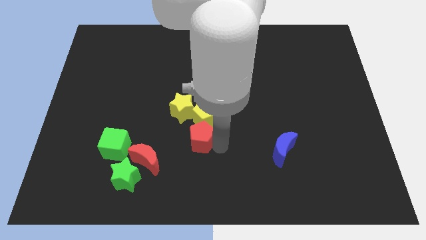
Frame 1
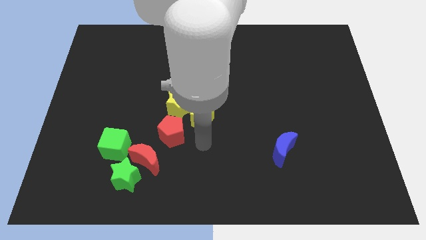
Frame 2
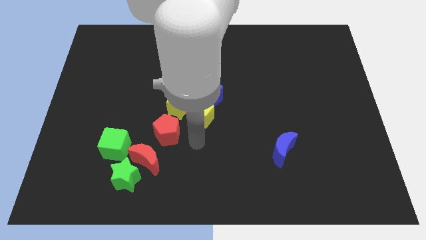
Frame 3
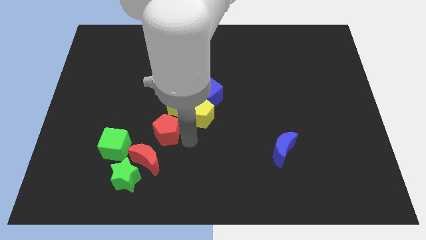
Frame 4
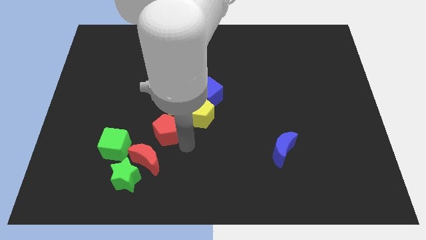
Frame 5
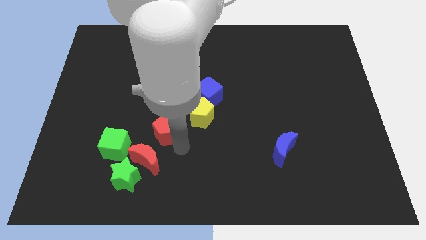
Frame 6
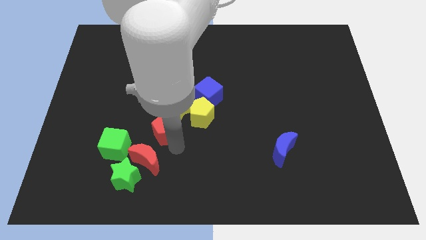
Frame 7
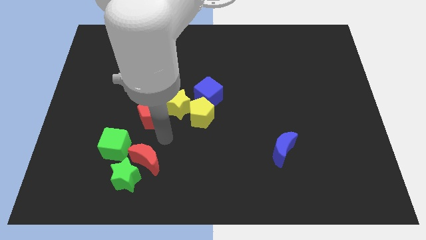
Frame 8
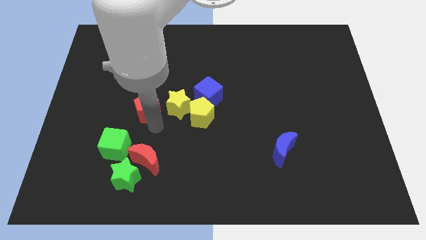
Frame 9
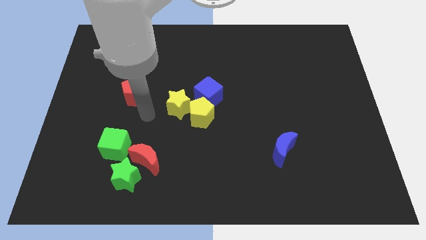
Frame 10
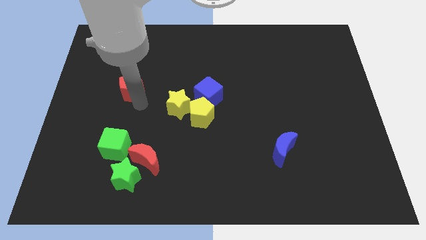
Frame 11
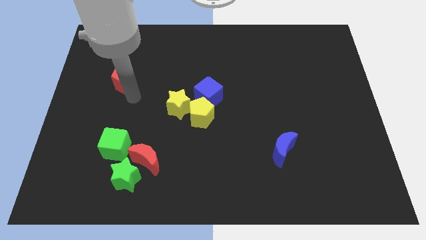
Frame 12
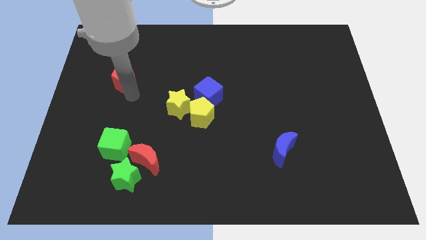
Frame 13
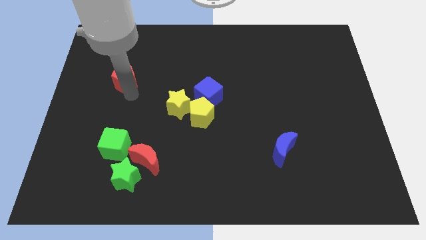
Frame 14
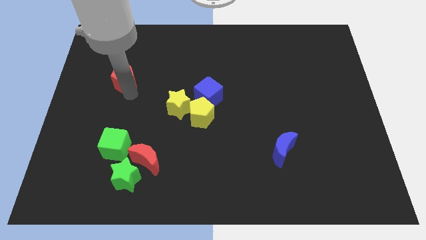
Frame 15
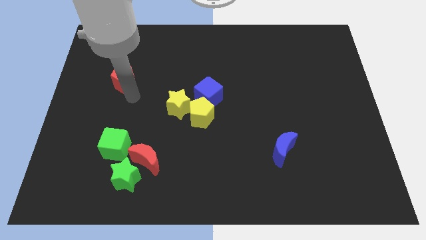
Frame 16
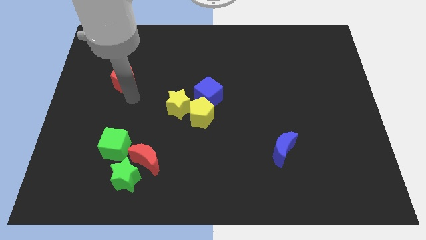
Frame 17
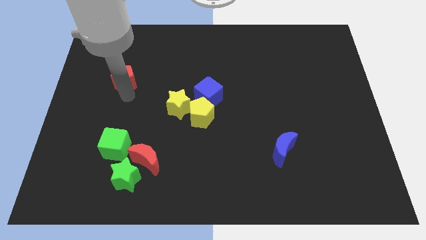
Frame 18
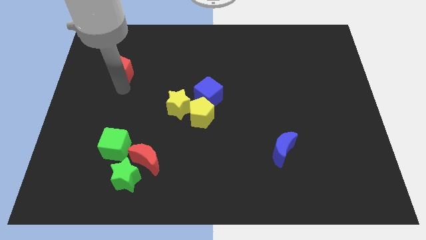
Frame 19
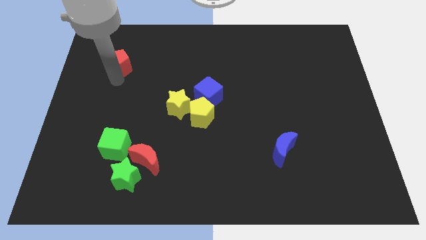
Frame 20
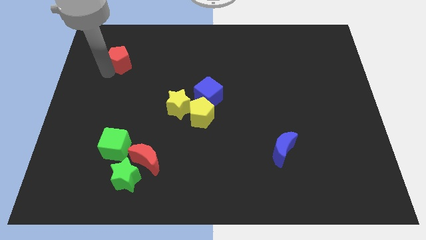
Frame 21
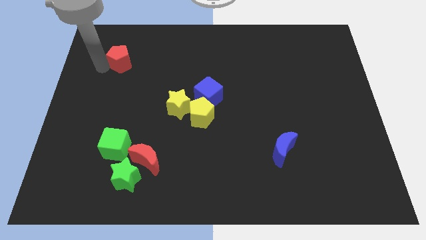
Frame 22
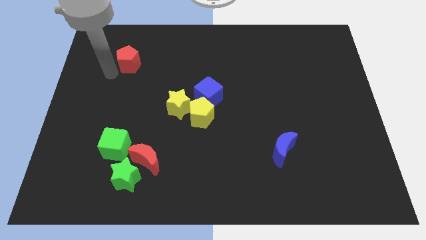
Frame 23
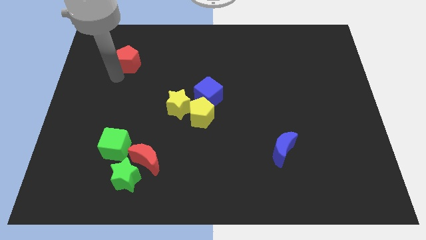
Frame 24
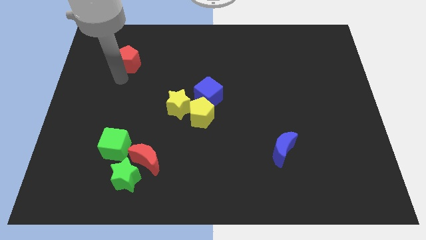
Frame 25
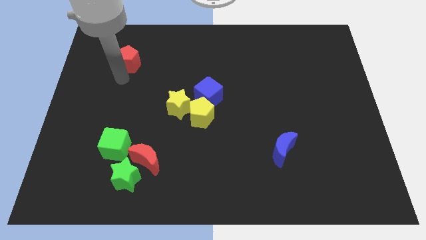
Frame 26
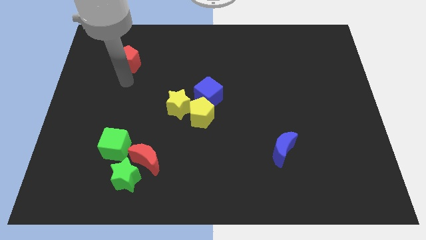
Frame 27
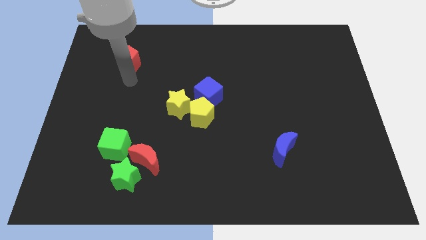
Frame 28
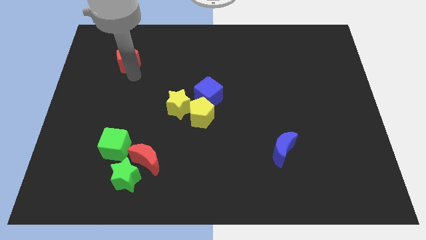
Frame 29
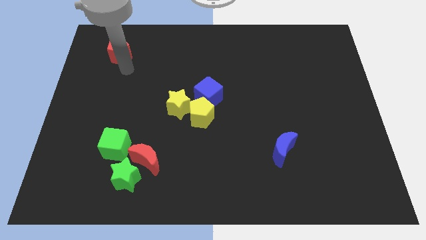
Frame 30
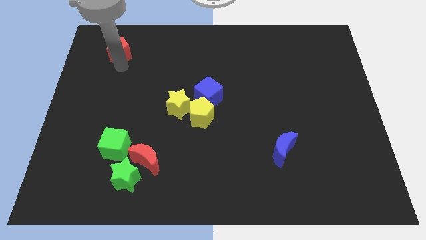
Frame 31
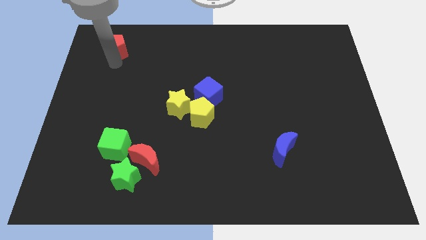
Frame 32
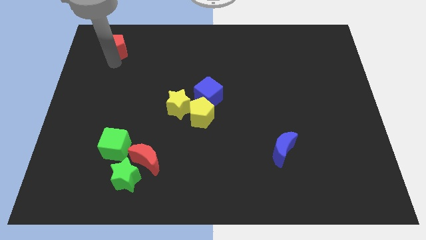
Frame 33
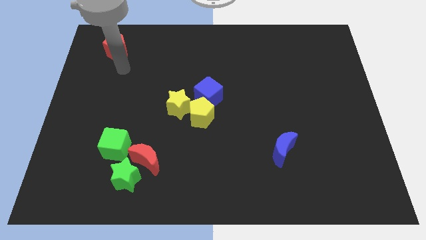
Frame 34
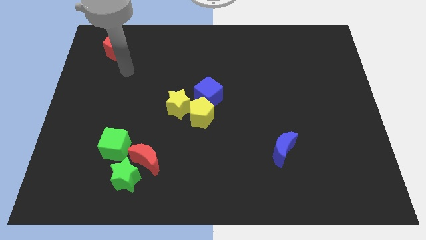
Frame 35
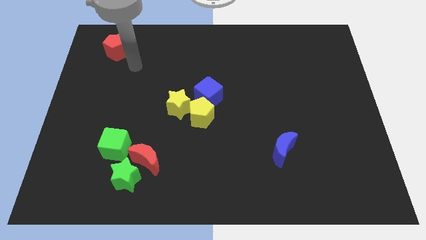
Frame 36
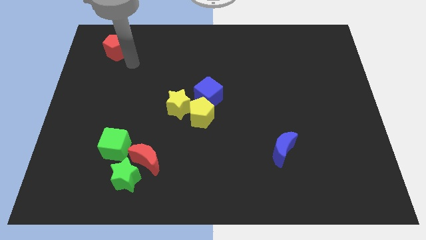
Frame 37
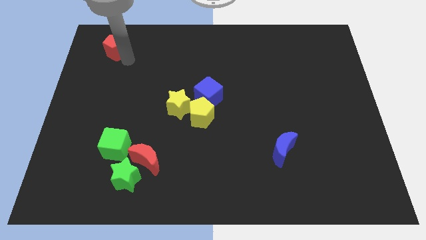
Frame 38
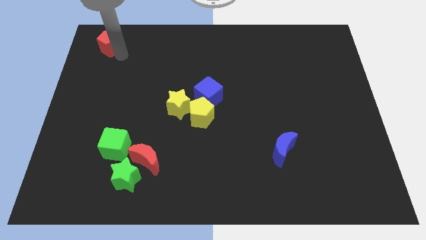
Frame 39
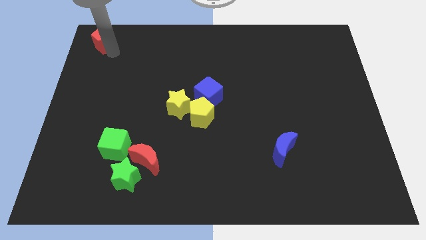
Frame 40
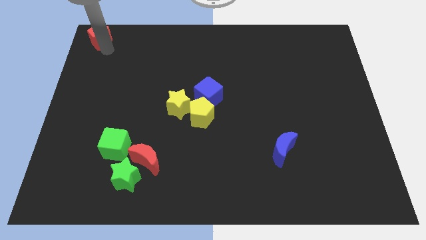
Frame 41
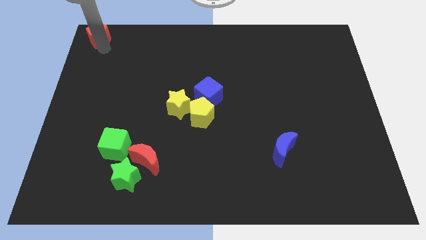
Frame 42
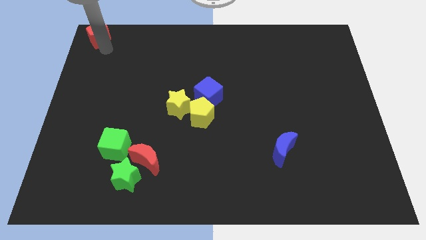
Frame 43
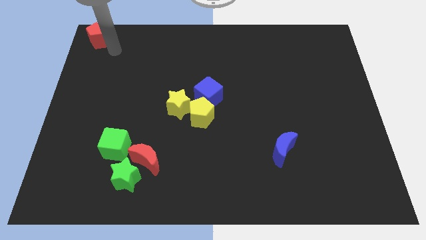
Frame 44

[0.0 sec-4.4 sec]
move the red pentagon to the top left corner of the board

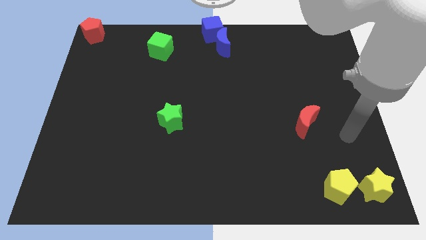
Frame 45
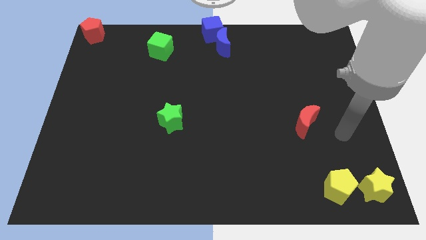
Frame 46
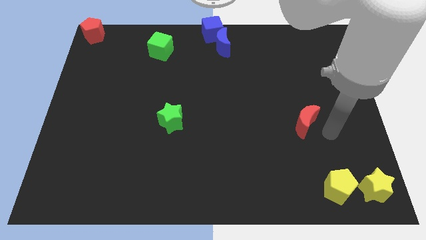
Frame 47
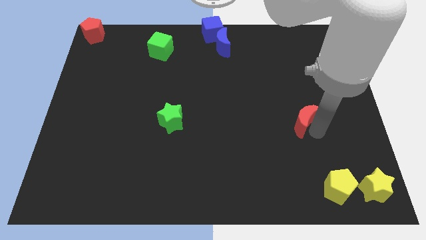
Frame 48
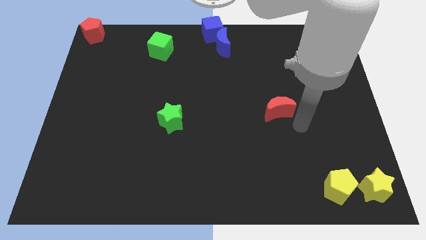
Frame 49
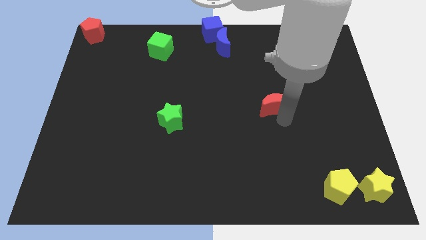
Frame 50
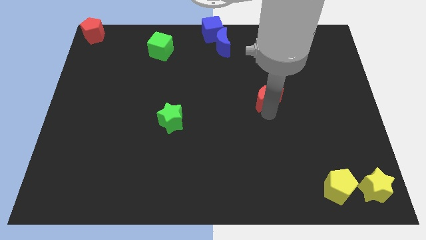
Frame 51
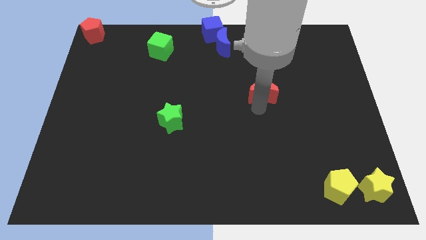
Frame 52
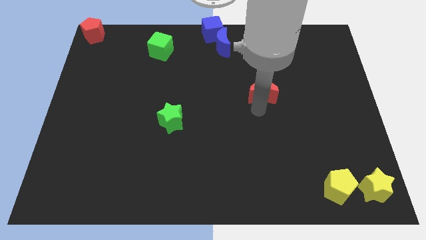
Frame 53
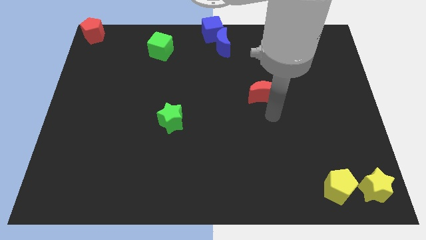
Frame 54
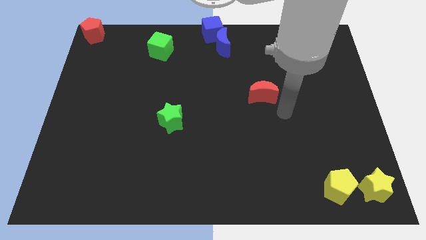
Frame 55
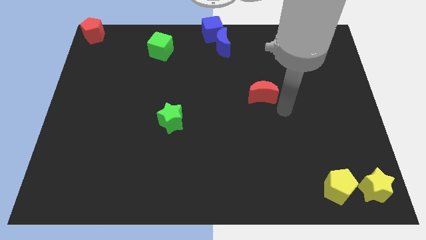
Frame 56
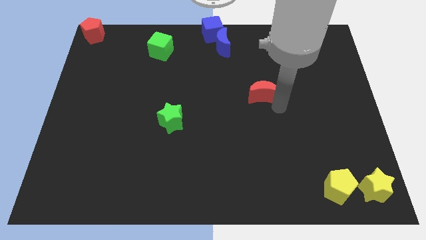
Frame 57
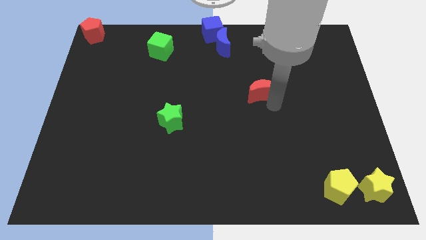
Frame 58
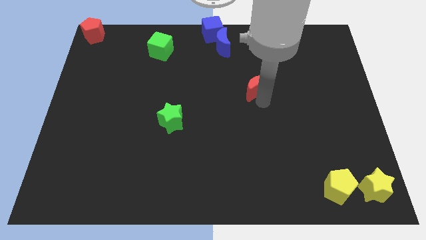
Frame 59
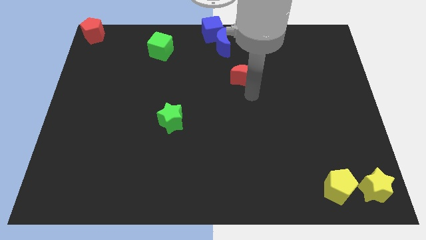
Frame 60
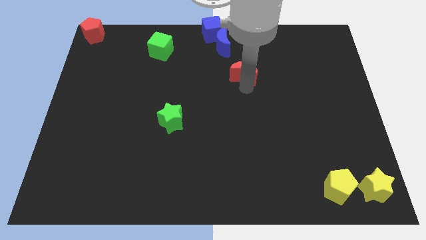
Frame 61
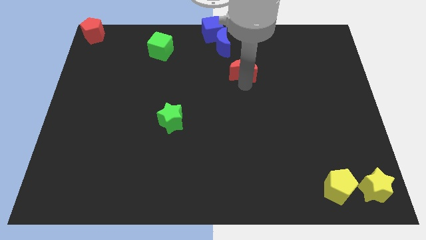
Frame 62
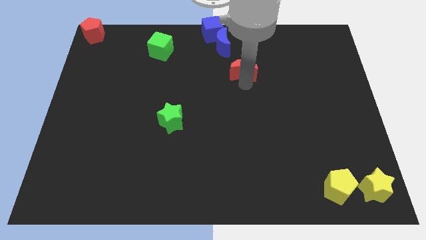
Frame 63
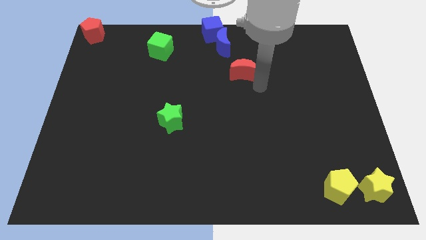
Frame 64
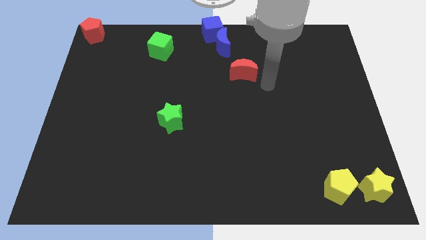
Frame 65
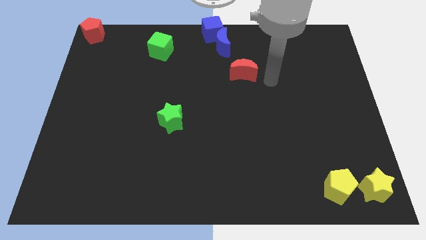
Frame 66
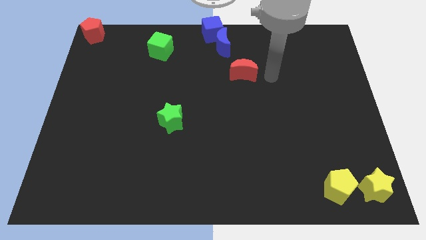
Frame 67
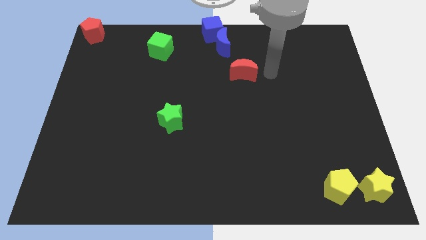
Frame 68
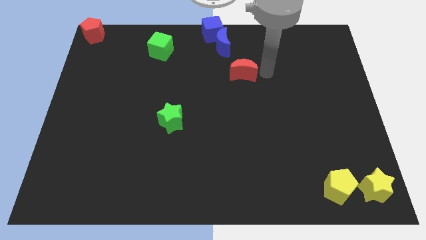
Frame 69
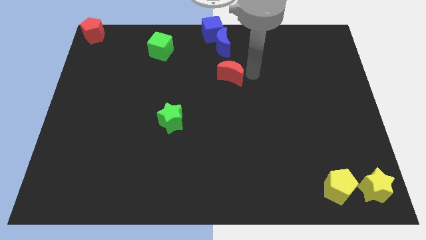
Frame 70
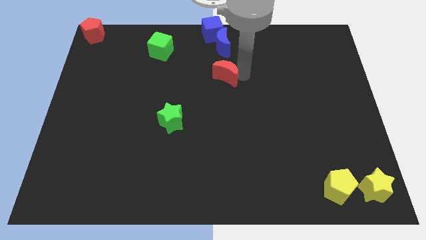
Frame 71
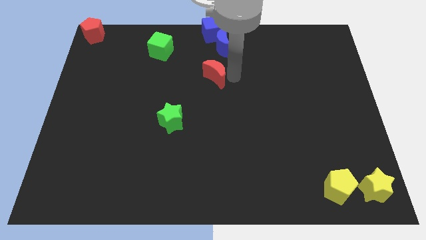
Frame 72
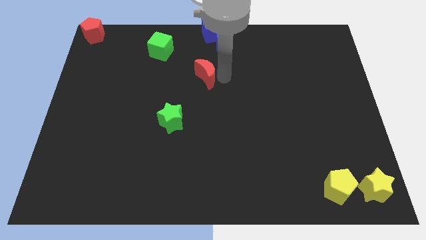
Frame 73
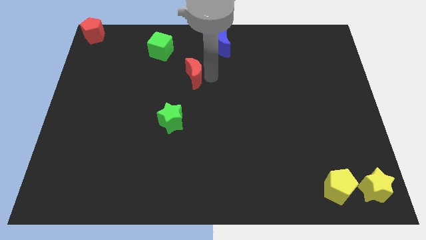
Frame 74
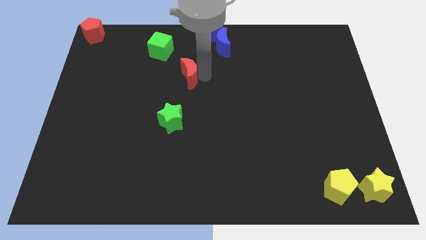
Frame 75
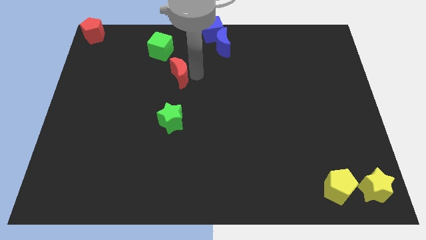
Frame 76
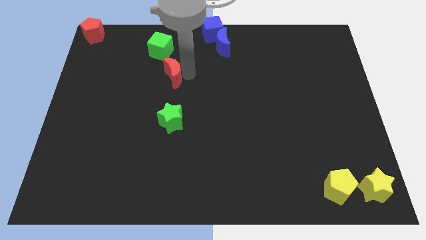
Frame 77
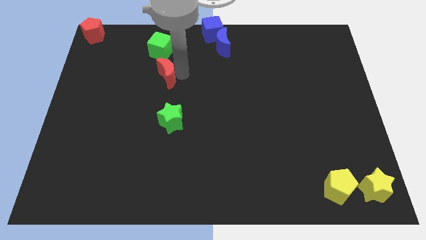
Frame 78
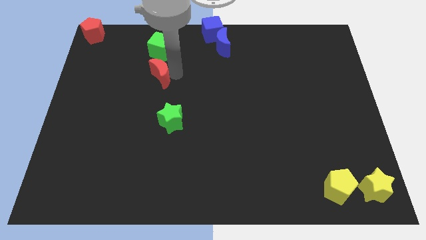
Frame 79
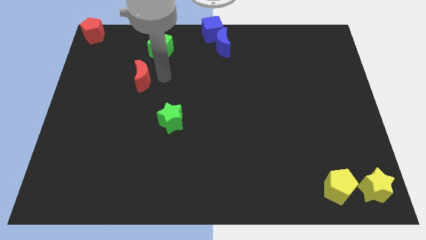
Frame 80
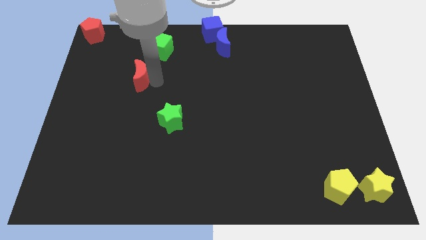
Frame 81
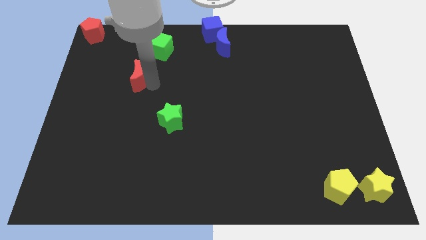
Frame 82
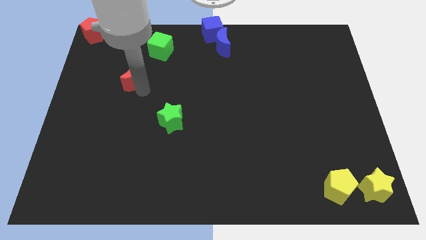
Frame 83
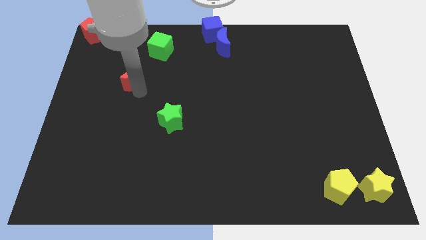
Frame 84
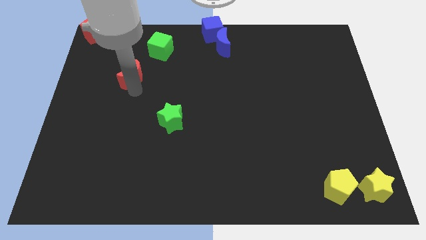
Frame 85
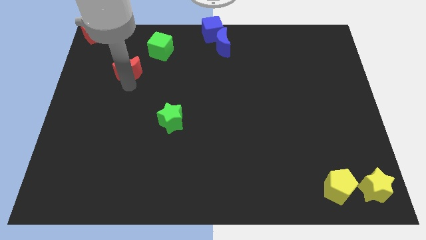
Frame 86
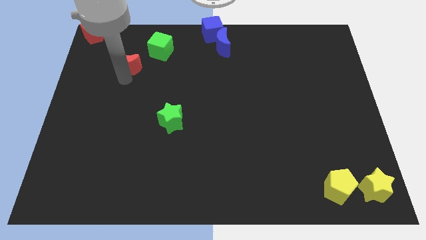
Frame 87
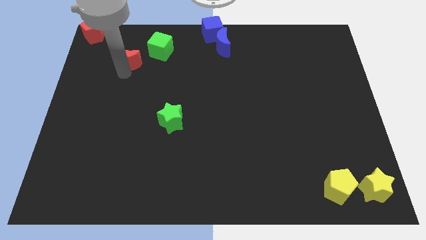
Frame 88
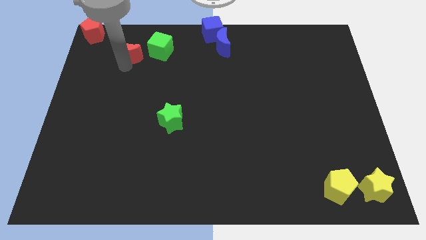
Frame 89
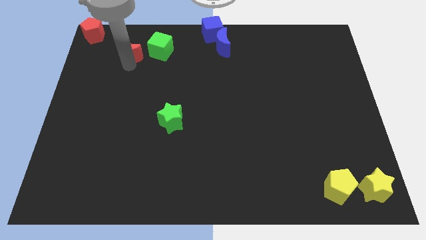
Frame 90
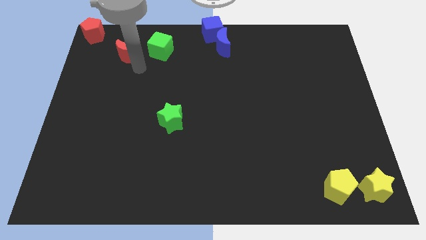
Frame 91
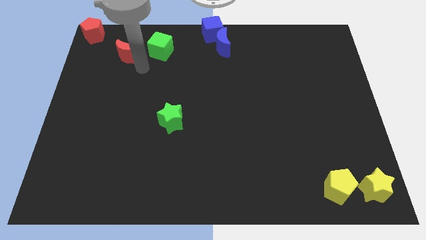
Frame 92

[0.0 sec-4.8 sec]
place the red moon beside the green cube
